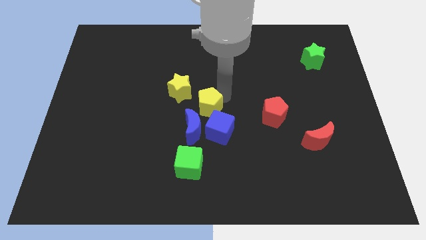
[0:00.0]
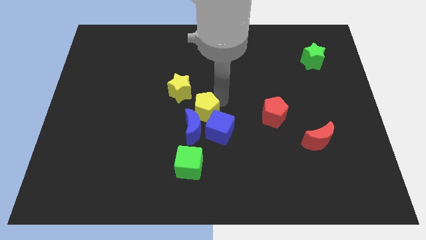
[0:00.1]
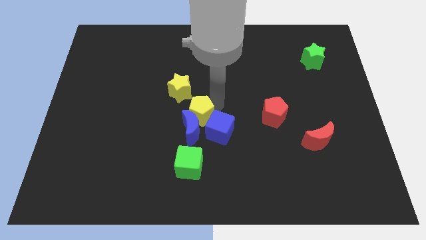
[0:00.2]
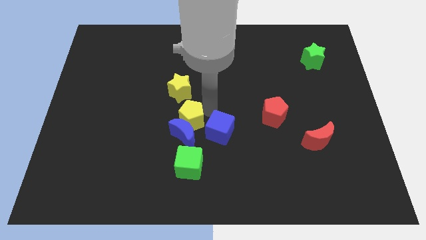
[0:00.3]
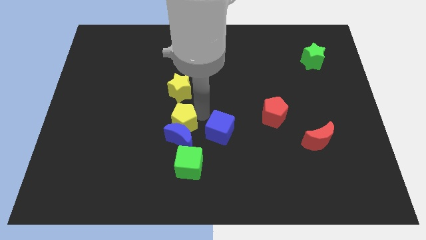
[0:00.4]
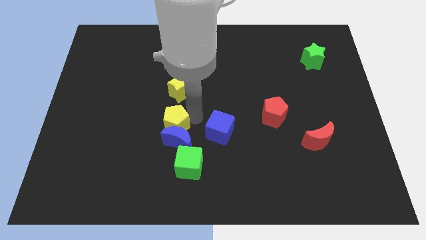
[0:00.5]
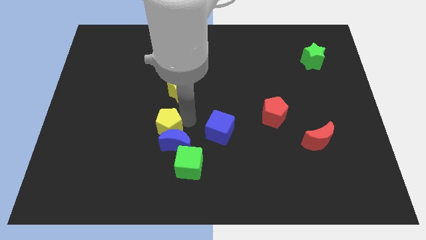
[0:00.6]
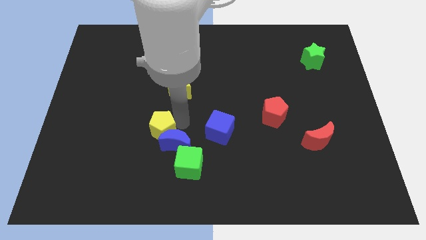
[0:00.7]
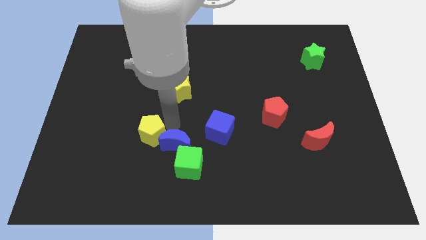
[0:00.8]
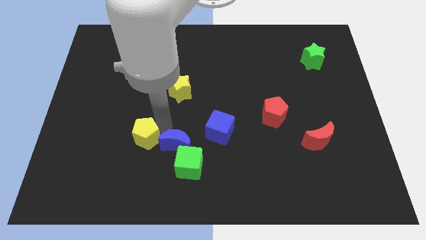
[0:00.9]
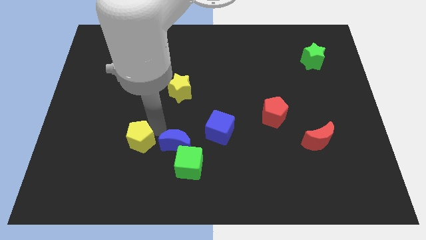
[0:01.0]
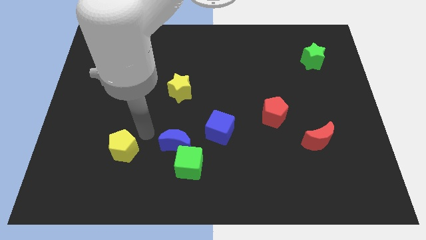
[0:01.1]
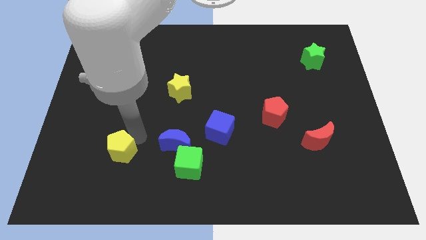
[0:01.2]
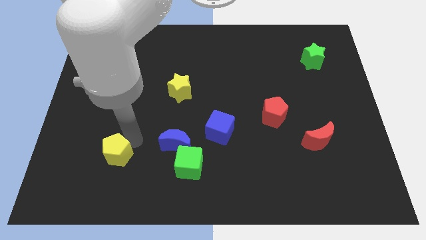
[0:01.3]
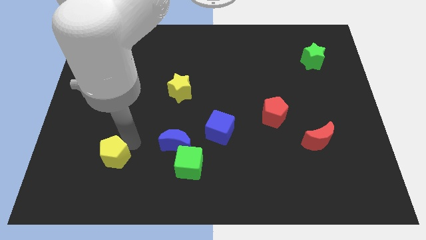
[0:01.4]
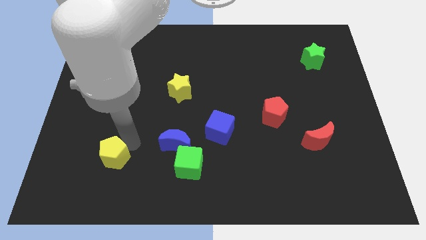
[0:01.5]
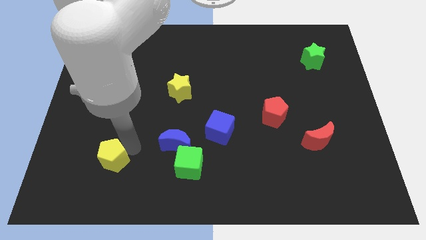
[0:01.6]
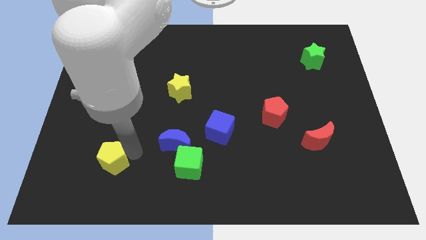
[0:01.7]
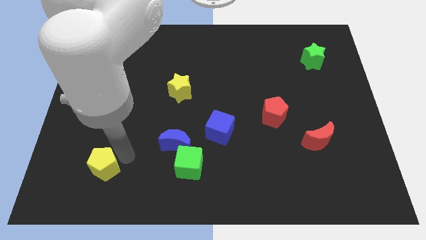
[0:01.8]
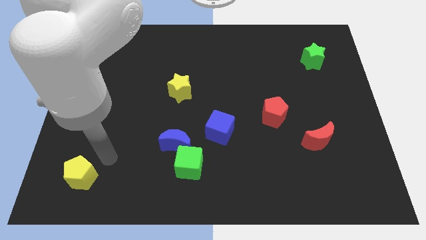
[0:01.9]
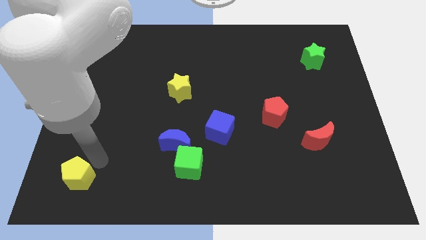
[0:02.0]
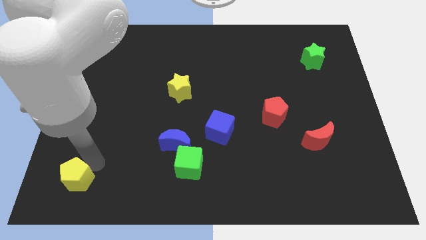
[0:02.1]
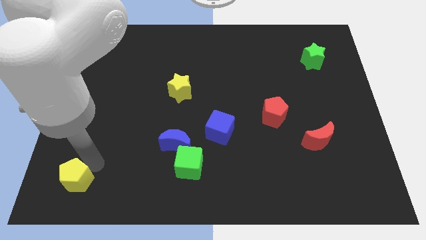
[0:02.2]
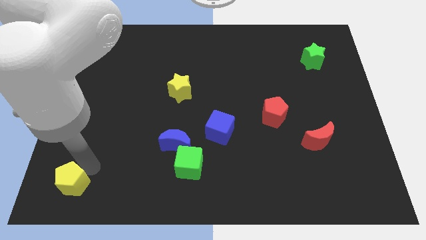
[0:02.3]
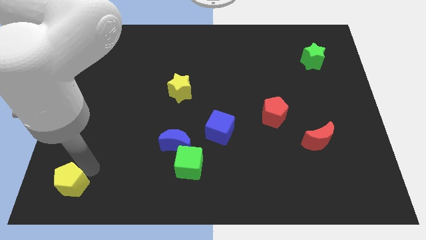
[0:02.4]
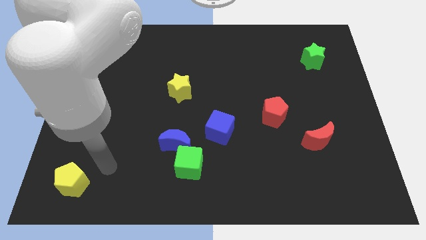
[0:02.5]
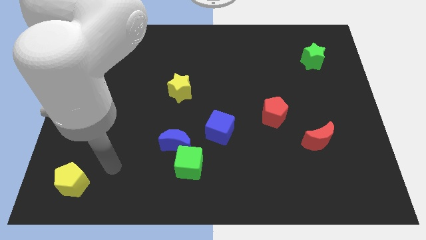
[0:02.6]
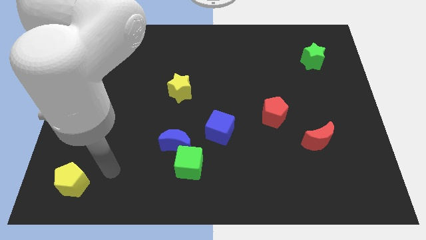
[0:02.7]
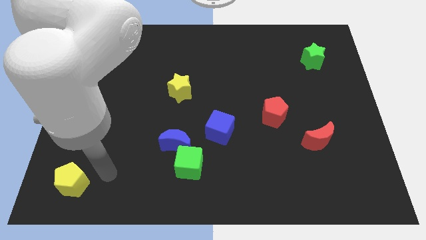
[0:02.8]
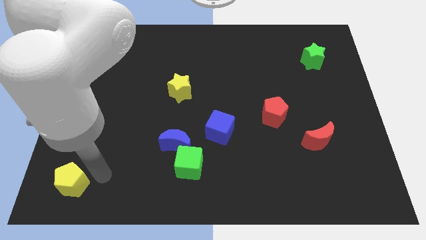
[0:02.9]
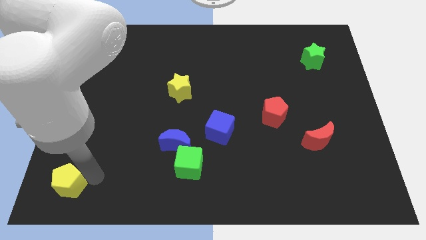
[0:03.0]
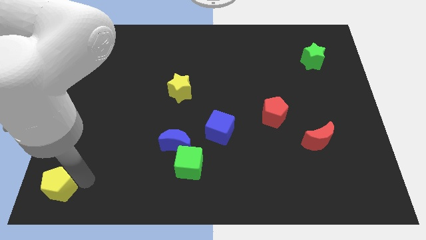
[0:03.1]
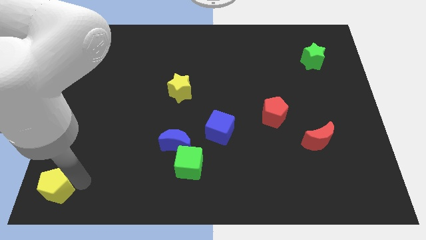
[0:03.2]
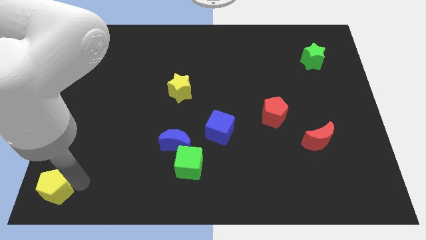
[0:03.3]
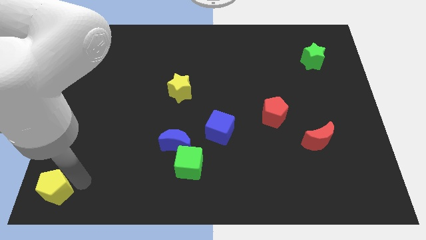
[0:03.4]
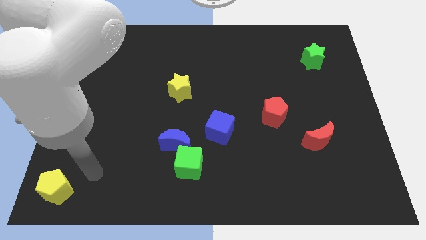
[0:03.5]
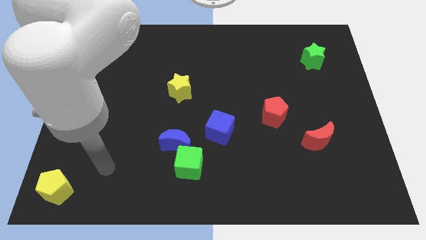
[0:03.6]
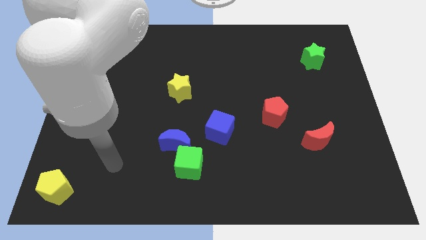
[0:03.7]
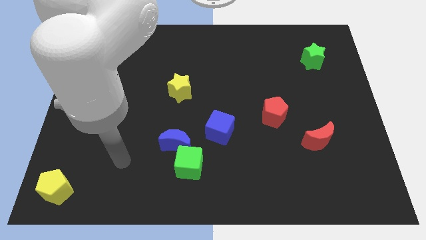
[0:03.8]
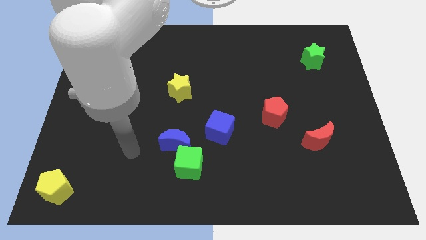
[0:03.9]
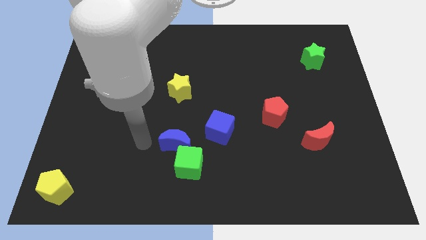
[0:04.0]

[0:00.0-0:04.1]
slide yellow pentagon towards bottom left

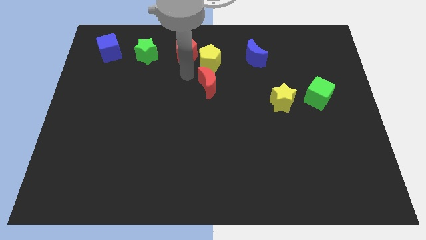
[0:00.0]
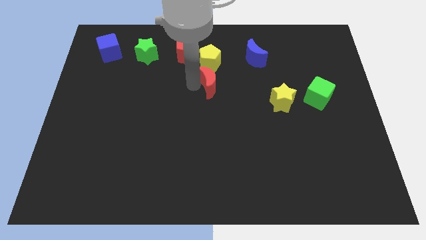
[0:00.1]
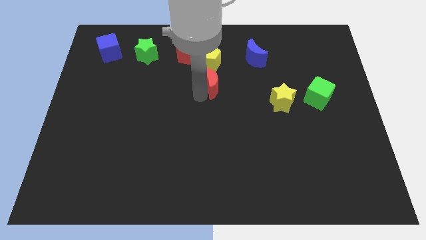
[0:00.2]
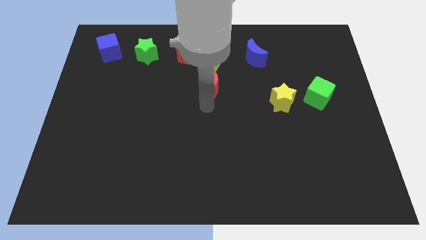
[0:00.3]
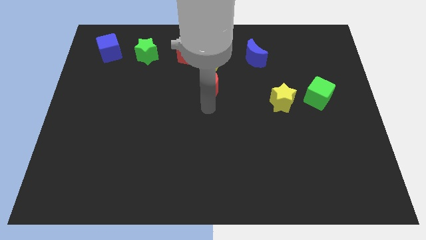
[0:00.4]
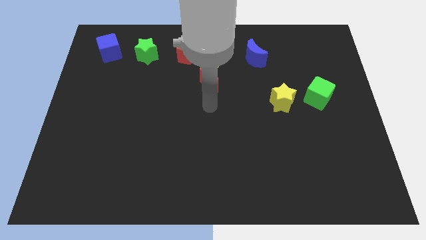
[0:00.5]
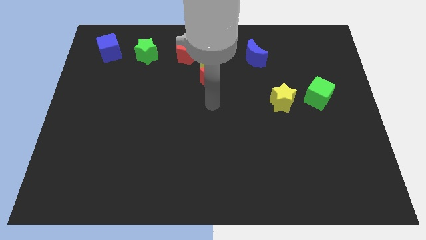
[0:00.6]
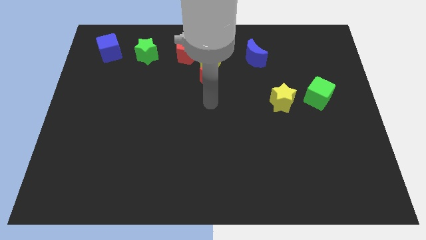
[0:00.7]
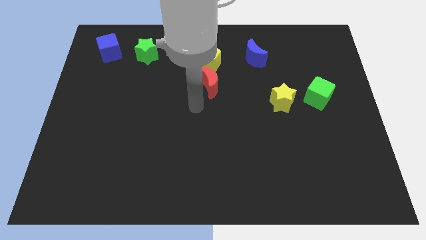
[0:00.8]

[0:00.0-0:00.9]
slightly touch left to the red moon

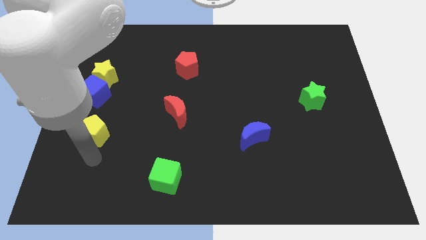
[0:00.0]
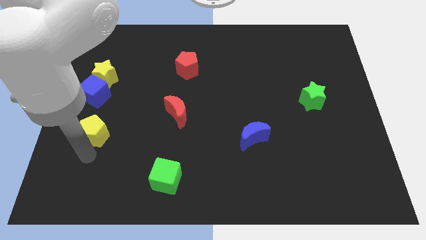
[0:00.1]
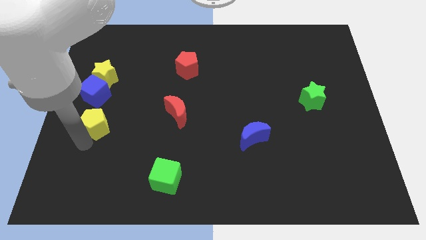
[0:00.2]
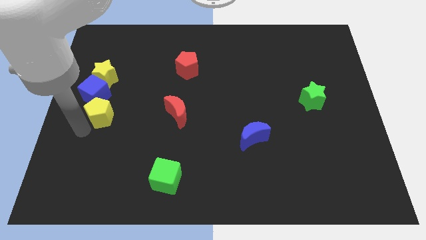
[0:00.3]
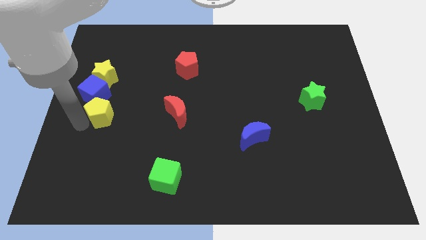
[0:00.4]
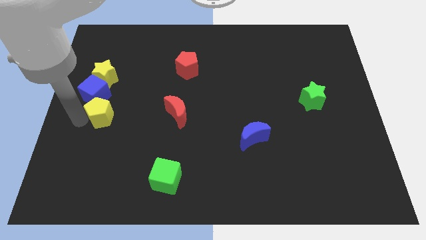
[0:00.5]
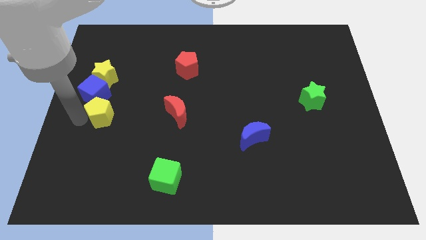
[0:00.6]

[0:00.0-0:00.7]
slightly push the yellow pentagon into the blue cube

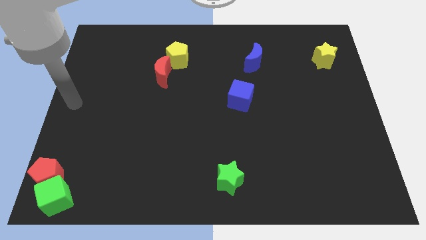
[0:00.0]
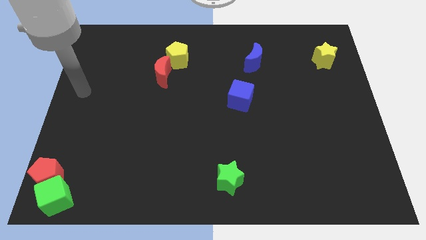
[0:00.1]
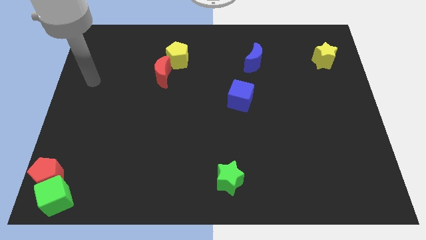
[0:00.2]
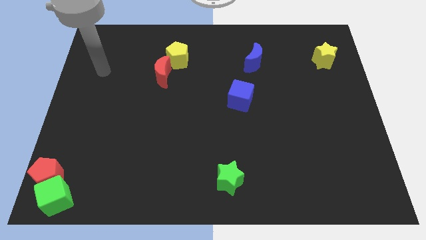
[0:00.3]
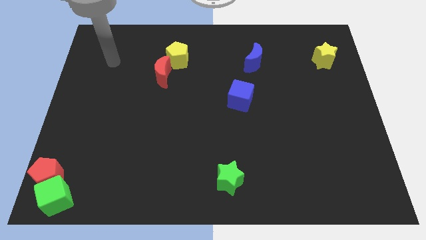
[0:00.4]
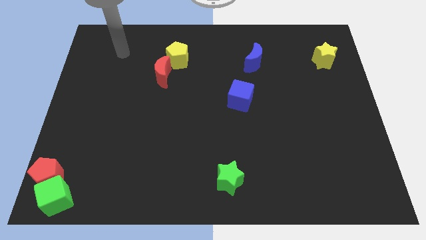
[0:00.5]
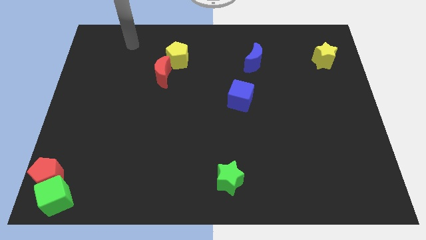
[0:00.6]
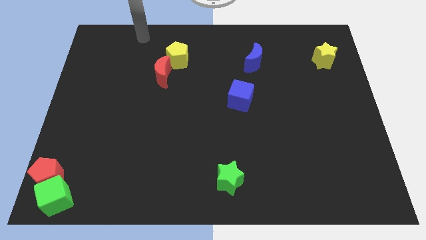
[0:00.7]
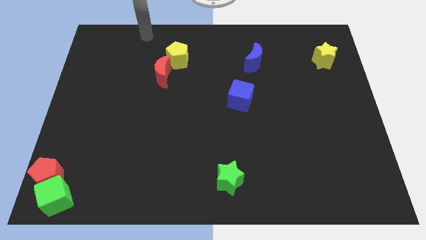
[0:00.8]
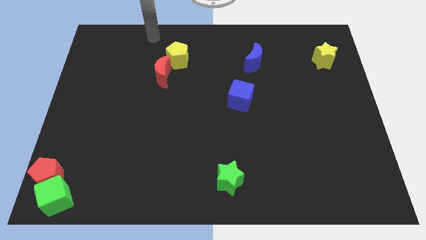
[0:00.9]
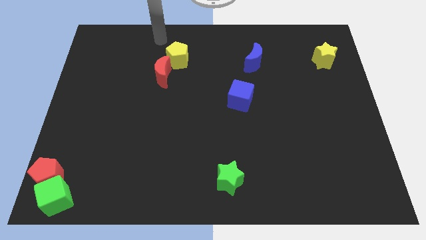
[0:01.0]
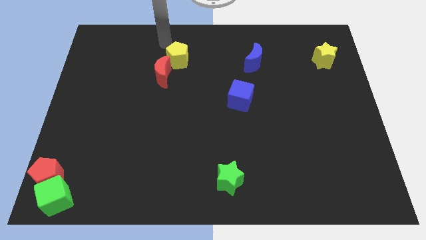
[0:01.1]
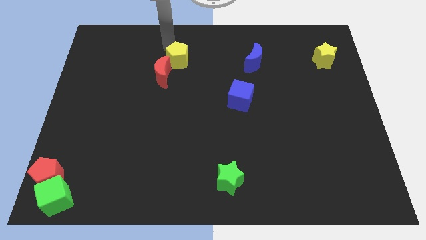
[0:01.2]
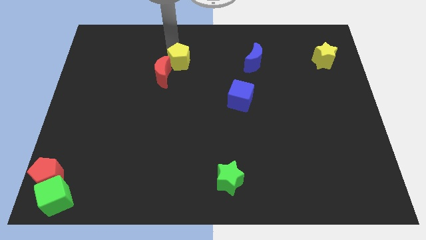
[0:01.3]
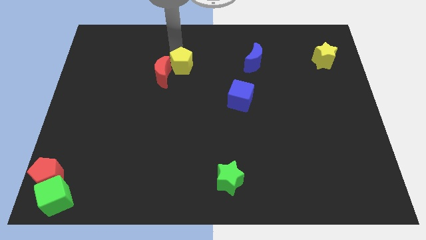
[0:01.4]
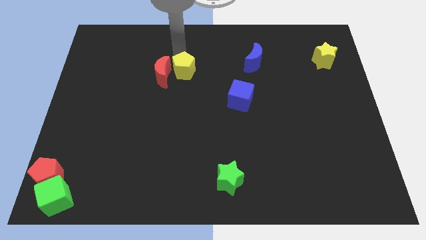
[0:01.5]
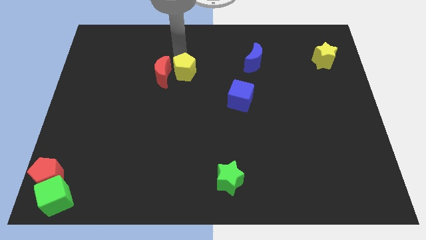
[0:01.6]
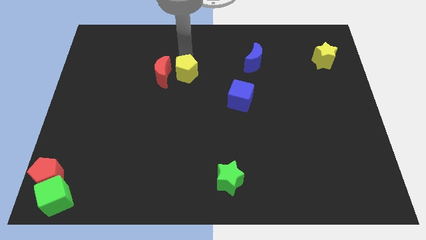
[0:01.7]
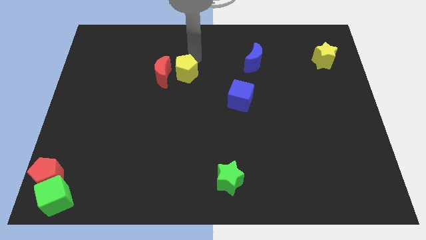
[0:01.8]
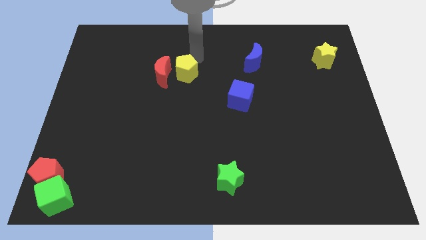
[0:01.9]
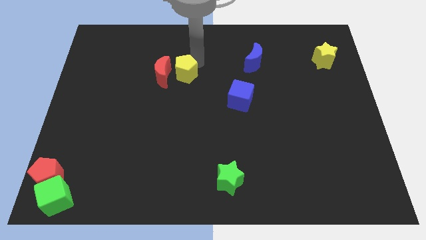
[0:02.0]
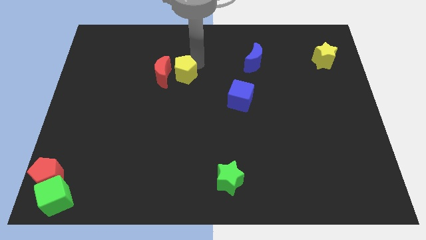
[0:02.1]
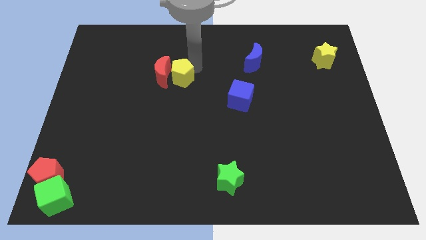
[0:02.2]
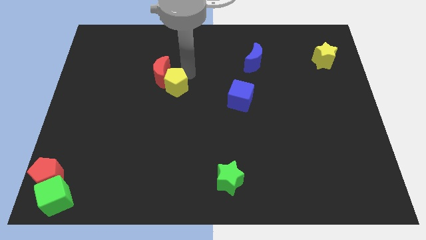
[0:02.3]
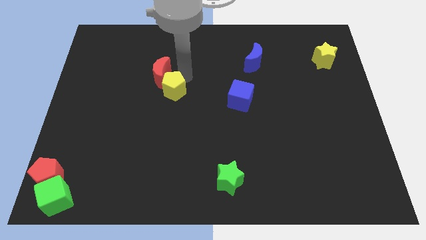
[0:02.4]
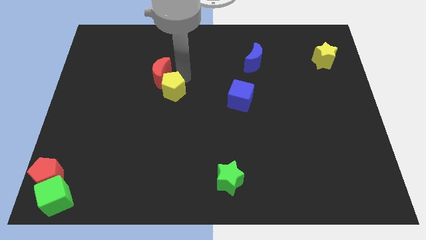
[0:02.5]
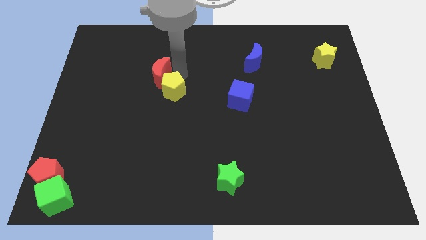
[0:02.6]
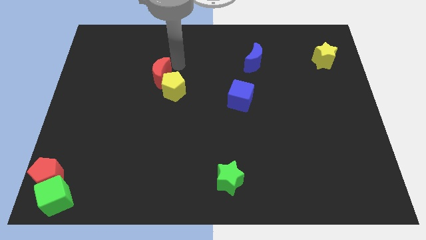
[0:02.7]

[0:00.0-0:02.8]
put the yellow pentagon at the bottom right of the red crescent

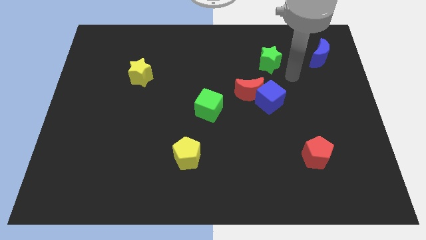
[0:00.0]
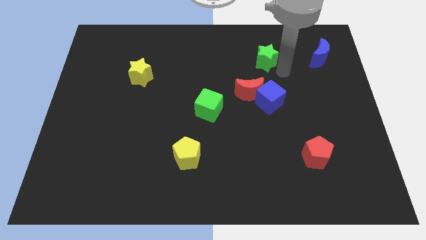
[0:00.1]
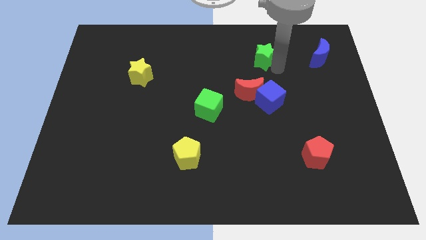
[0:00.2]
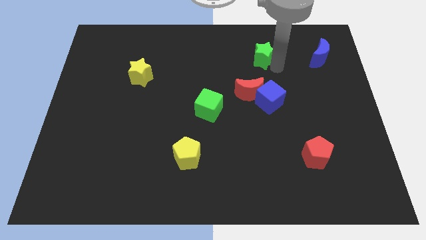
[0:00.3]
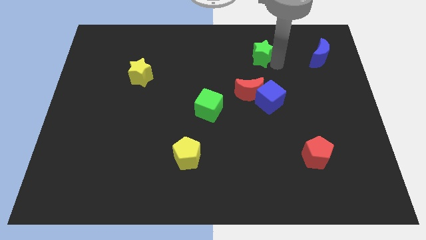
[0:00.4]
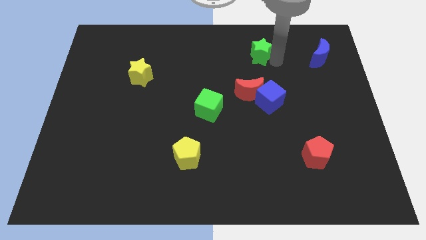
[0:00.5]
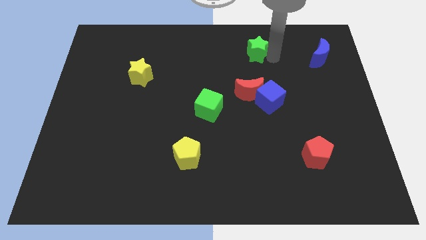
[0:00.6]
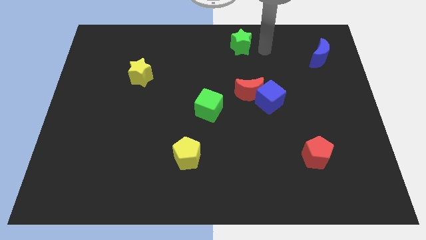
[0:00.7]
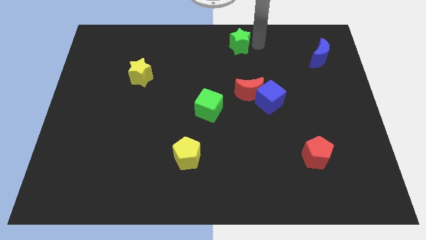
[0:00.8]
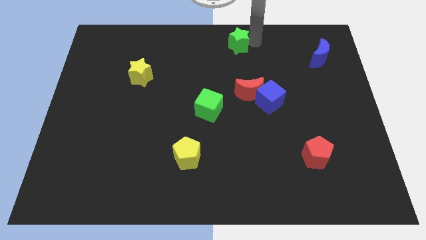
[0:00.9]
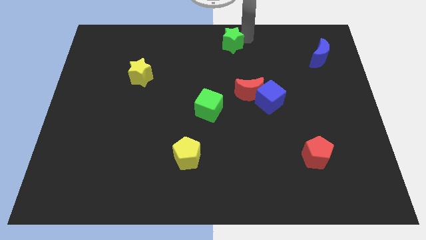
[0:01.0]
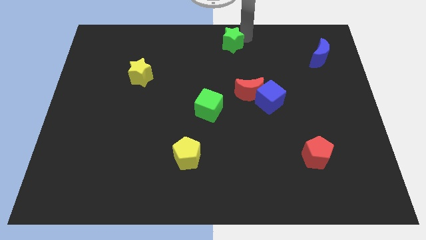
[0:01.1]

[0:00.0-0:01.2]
move green star to the top middle of the board
